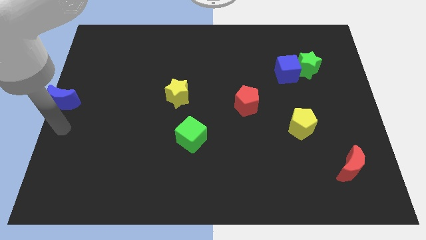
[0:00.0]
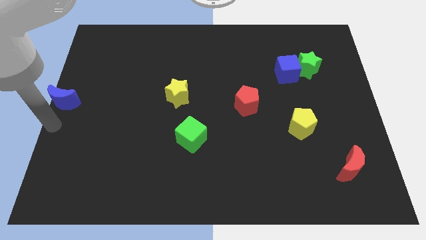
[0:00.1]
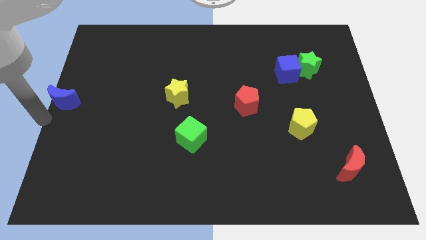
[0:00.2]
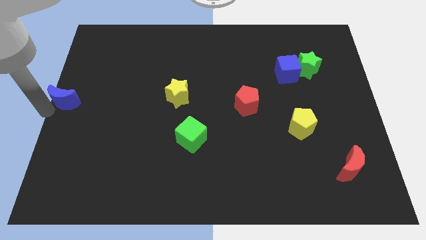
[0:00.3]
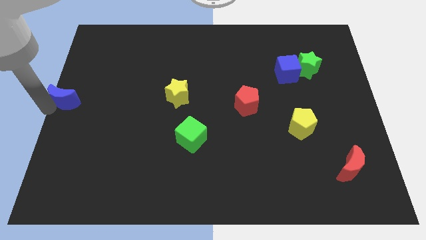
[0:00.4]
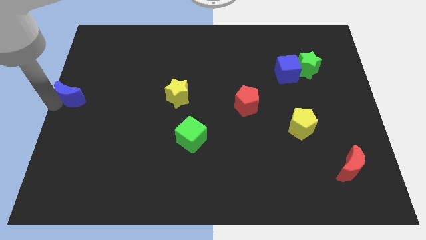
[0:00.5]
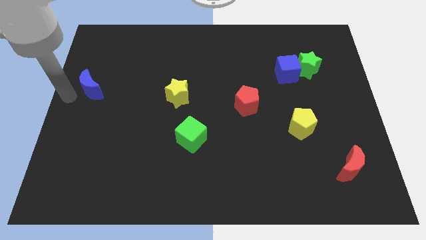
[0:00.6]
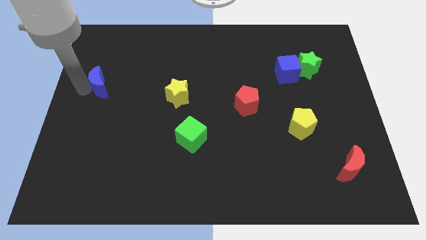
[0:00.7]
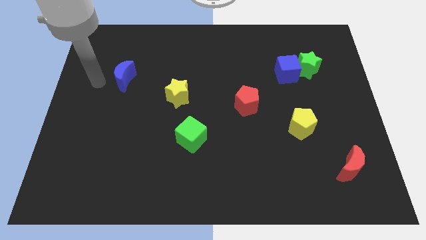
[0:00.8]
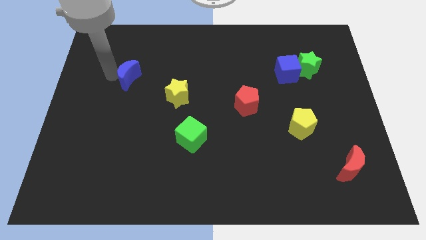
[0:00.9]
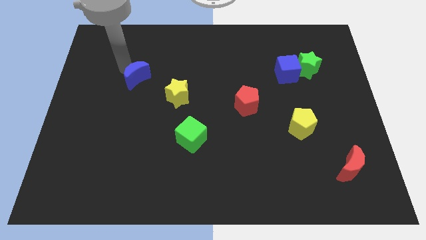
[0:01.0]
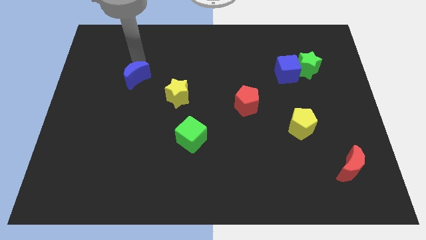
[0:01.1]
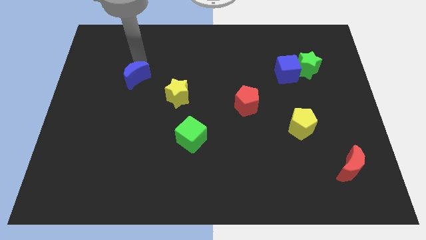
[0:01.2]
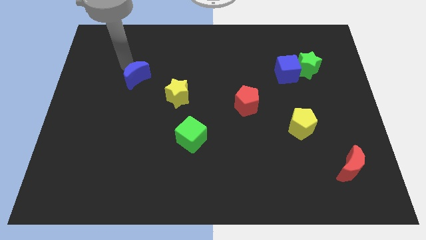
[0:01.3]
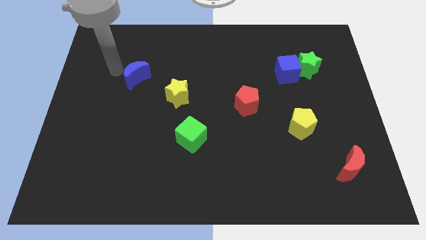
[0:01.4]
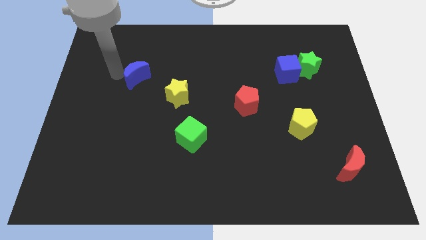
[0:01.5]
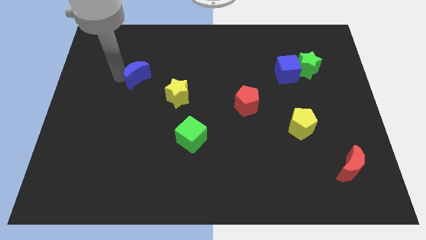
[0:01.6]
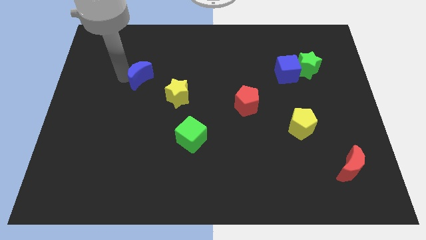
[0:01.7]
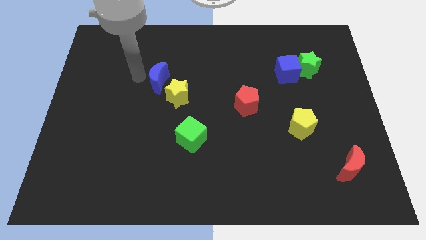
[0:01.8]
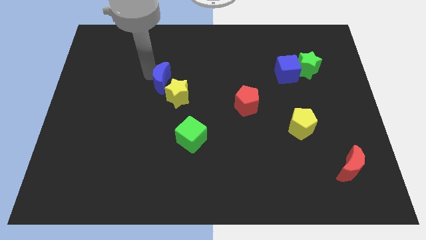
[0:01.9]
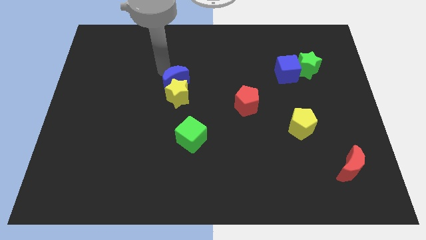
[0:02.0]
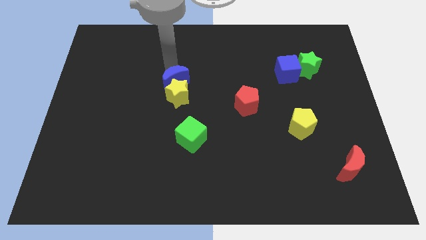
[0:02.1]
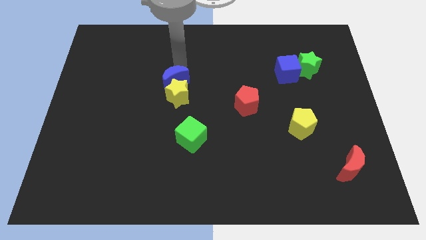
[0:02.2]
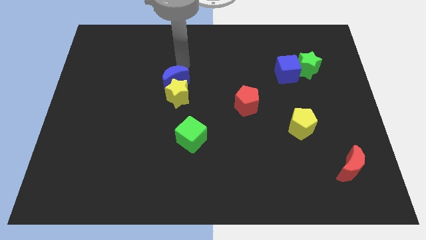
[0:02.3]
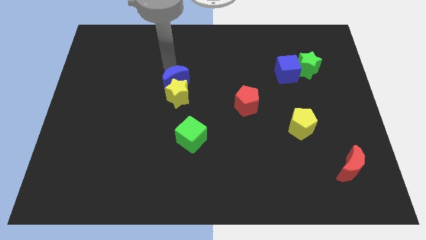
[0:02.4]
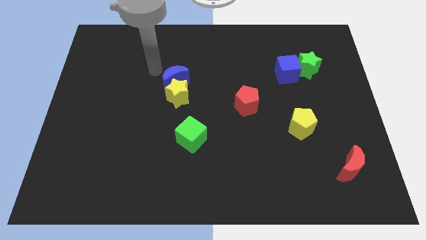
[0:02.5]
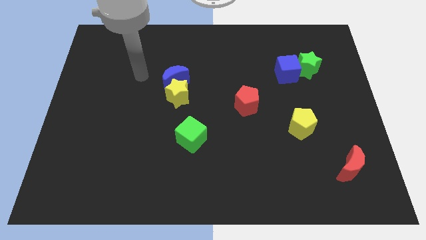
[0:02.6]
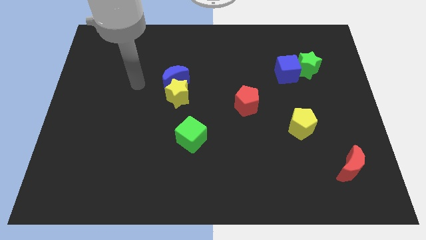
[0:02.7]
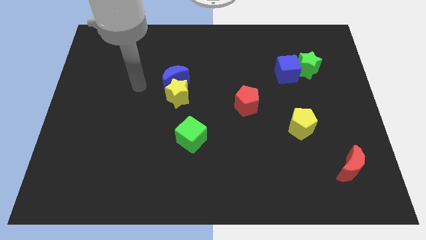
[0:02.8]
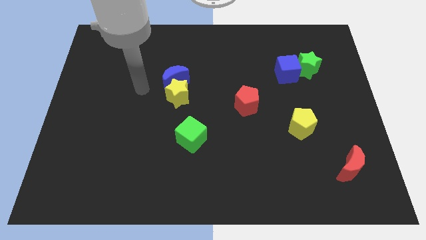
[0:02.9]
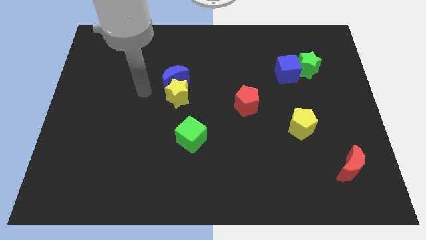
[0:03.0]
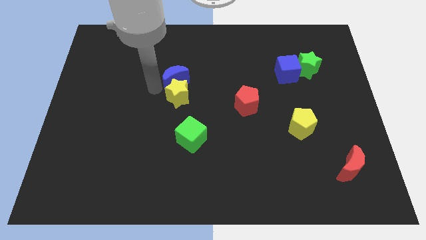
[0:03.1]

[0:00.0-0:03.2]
push blue moon to the top of yellow star

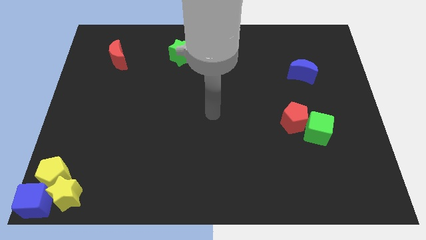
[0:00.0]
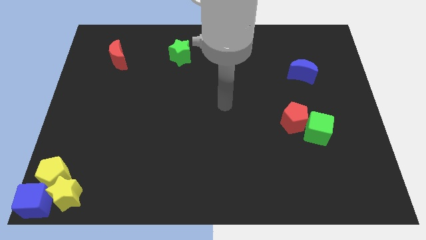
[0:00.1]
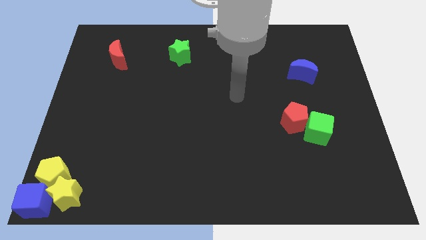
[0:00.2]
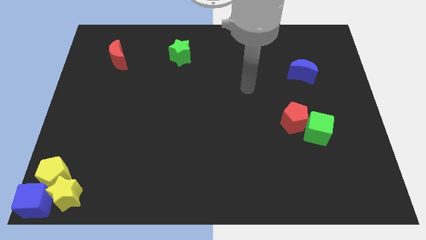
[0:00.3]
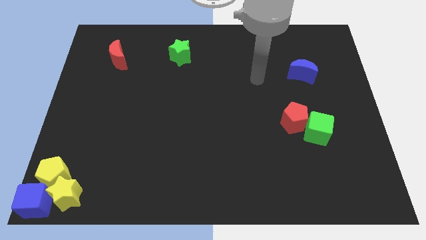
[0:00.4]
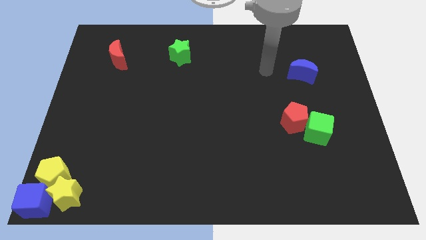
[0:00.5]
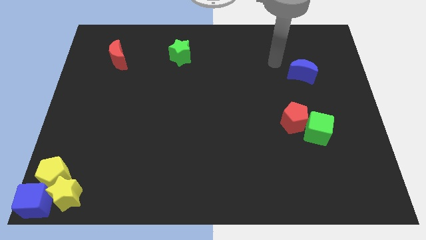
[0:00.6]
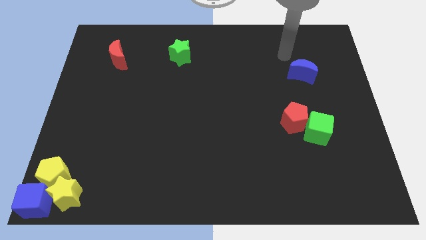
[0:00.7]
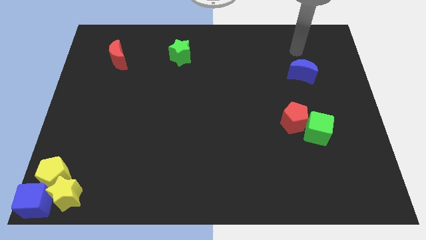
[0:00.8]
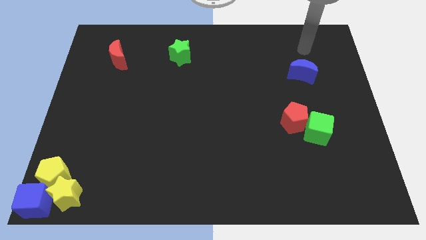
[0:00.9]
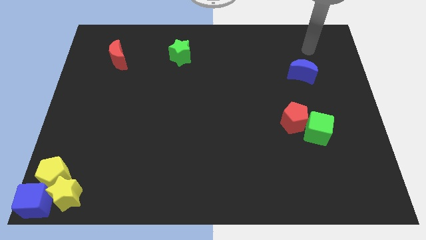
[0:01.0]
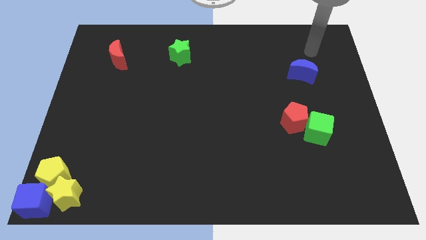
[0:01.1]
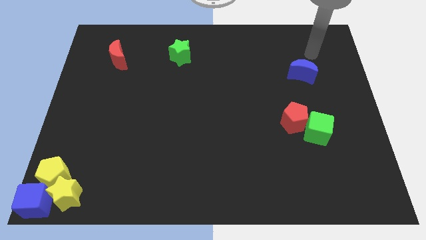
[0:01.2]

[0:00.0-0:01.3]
put your arm at the top of blue crescent

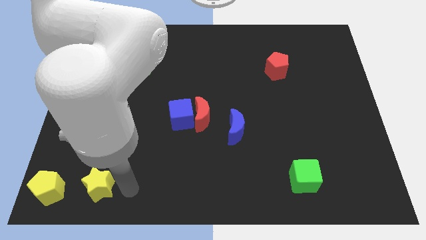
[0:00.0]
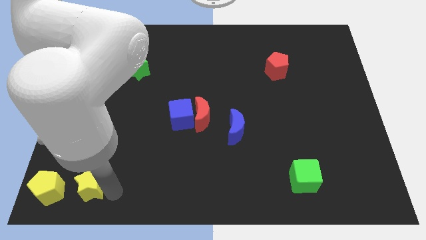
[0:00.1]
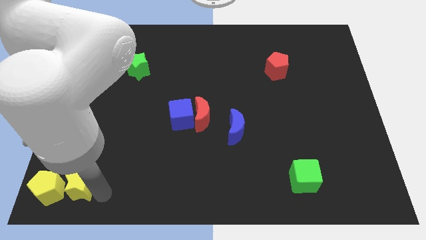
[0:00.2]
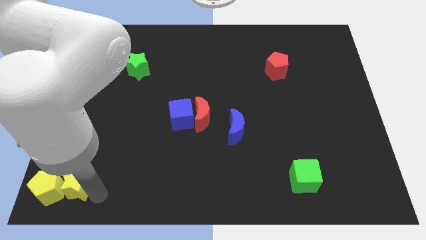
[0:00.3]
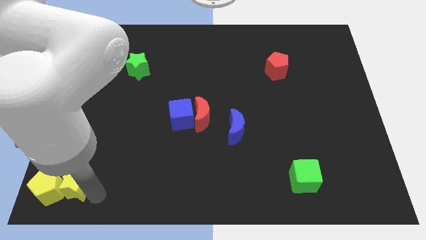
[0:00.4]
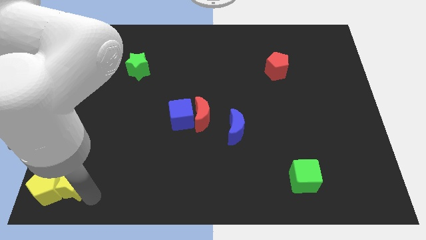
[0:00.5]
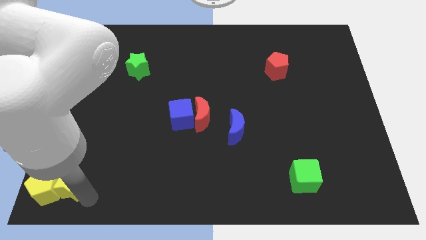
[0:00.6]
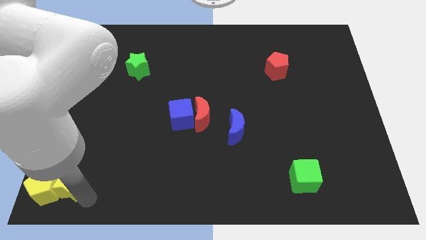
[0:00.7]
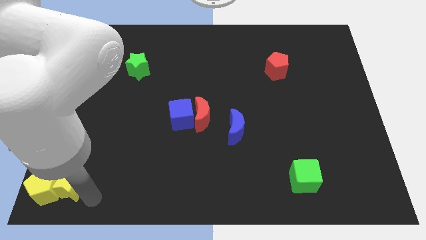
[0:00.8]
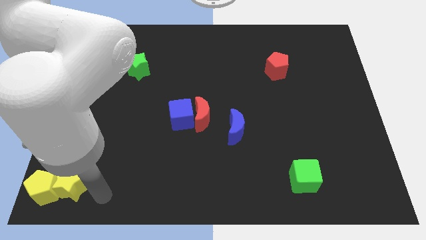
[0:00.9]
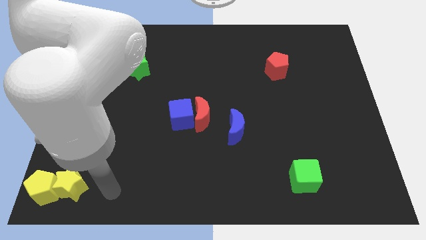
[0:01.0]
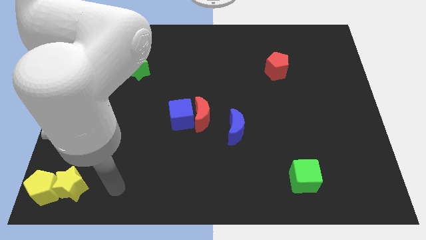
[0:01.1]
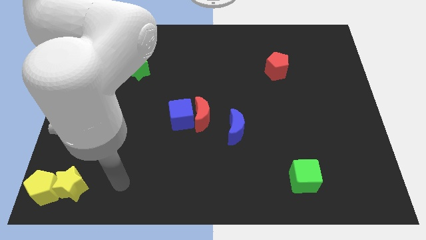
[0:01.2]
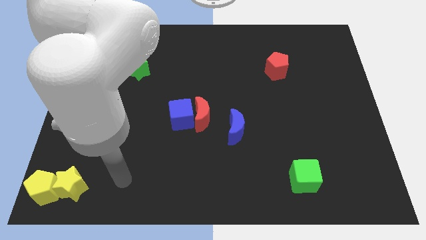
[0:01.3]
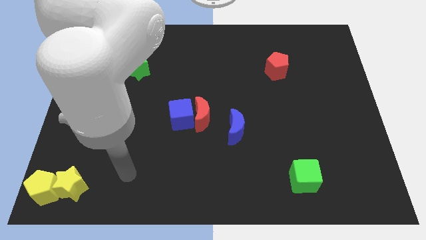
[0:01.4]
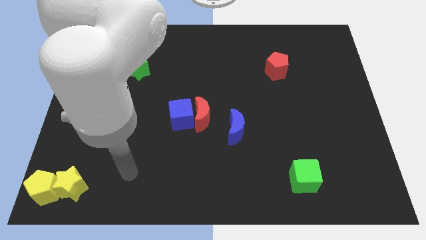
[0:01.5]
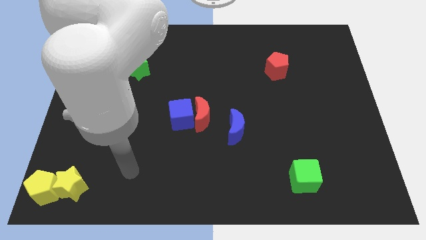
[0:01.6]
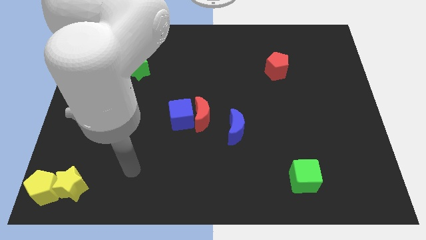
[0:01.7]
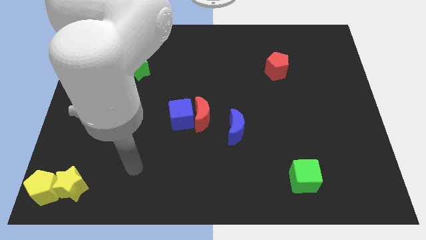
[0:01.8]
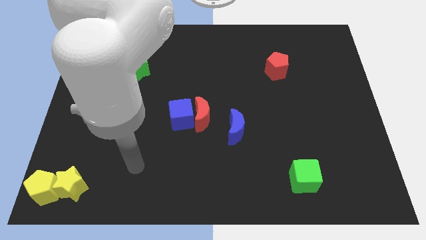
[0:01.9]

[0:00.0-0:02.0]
slide the yellow star to the bottom left of the board

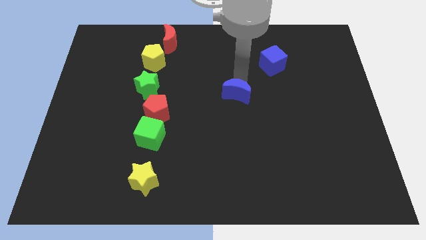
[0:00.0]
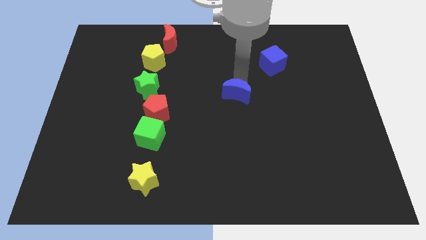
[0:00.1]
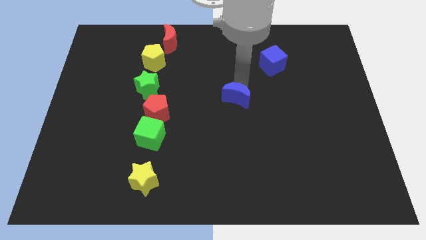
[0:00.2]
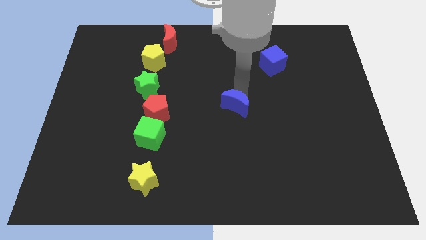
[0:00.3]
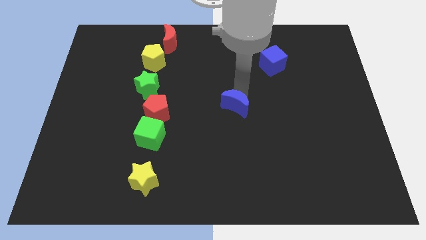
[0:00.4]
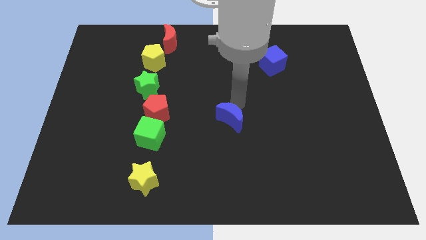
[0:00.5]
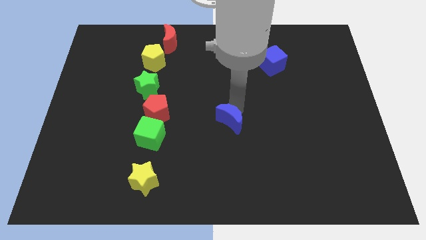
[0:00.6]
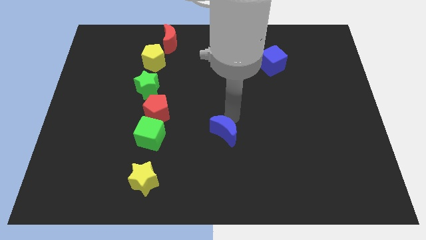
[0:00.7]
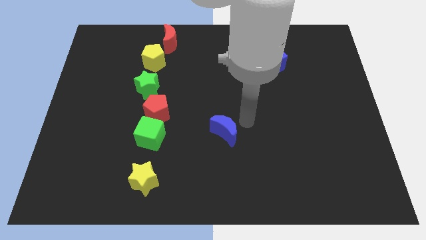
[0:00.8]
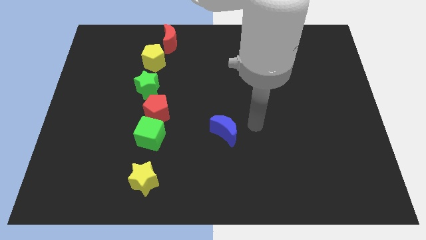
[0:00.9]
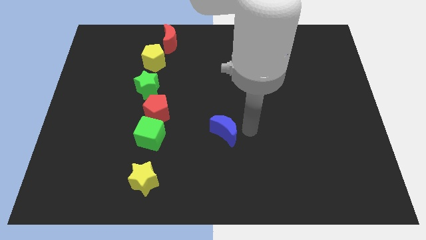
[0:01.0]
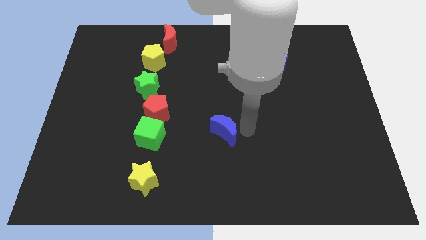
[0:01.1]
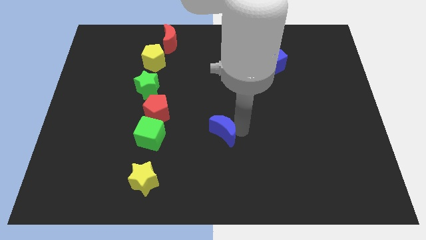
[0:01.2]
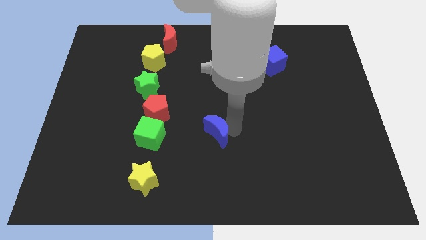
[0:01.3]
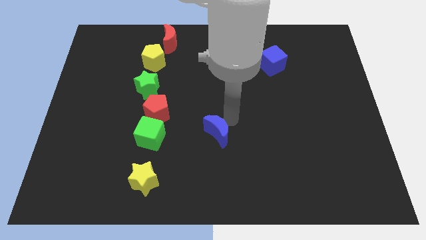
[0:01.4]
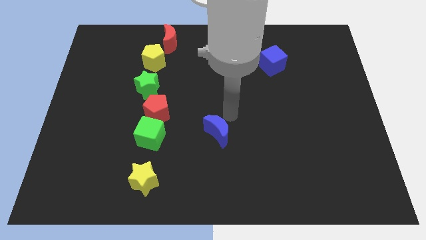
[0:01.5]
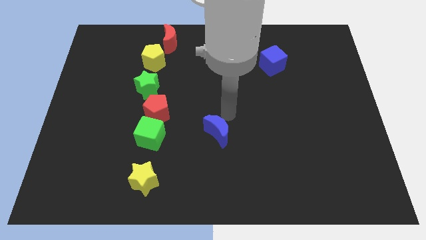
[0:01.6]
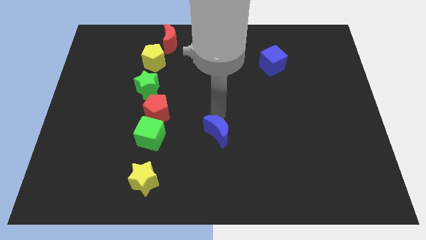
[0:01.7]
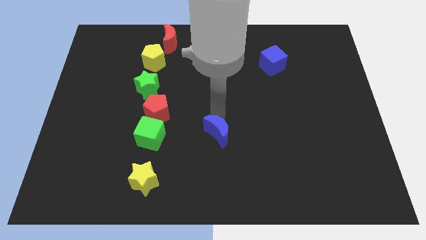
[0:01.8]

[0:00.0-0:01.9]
push the blue cube slightly downwards

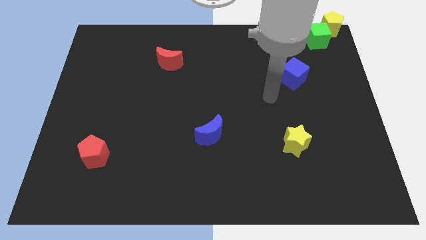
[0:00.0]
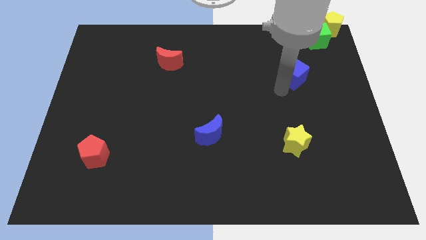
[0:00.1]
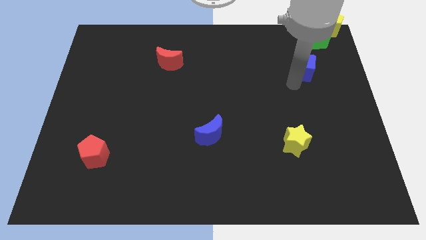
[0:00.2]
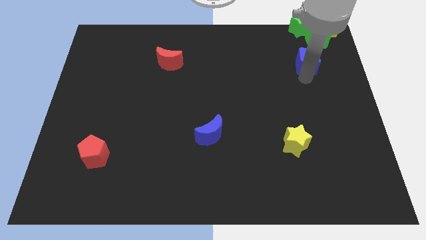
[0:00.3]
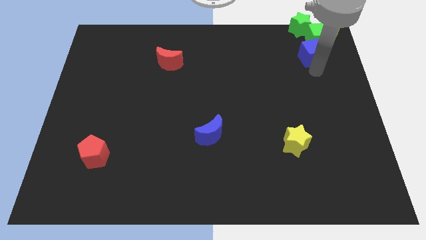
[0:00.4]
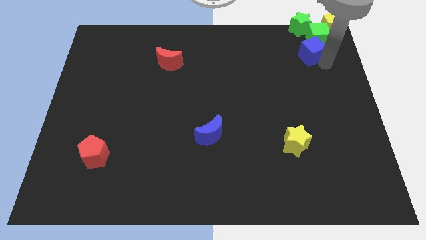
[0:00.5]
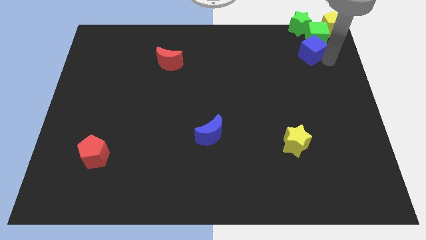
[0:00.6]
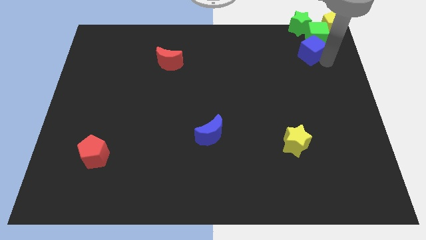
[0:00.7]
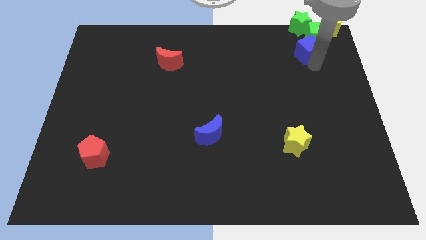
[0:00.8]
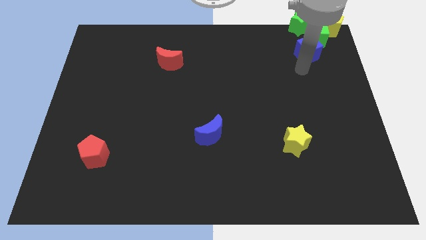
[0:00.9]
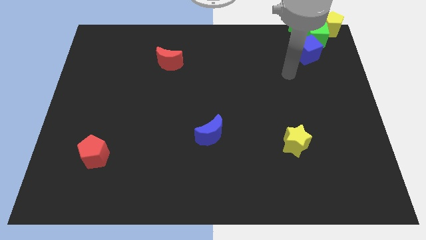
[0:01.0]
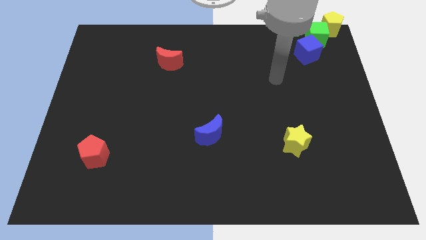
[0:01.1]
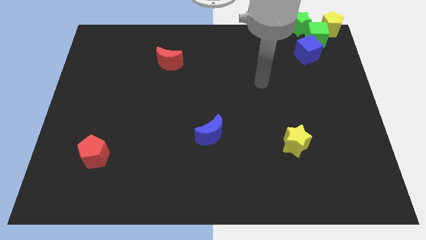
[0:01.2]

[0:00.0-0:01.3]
push the blue cube into the green cube
